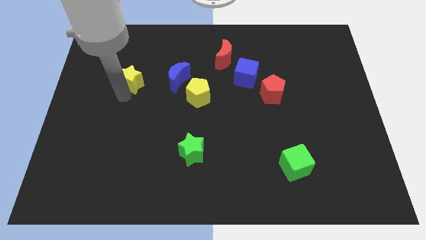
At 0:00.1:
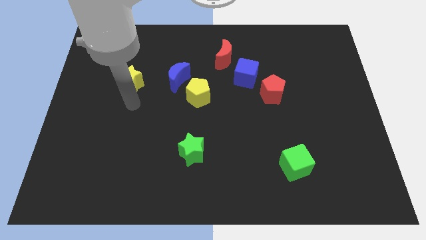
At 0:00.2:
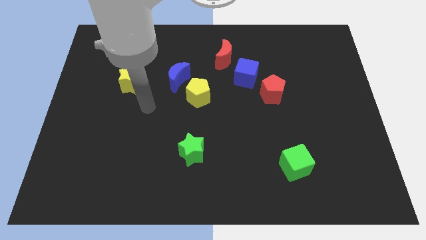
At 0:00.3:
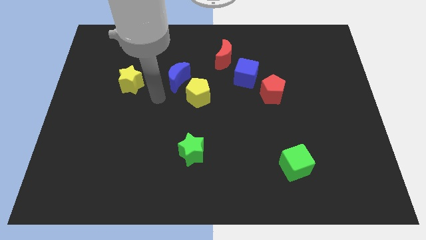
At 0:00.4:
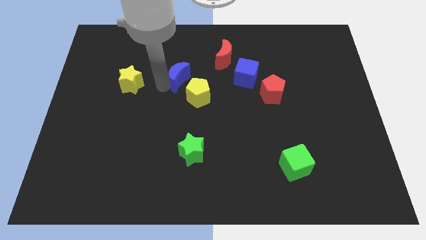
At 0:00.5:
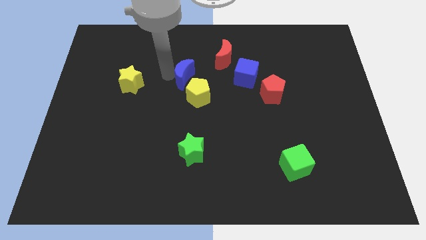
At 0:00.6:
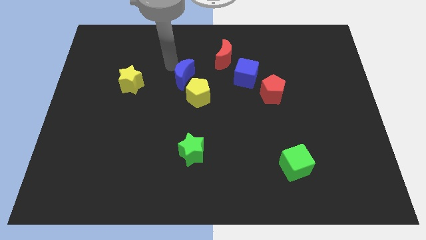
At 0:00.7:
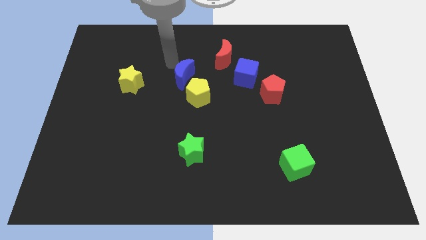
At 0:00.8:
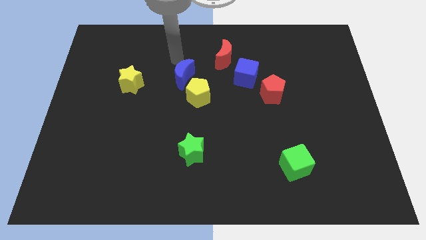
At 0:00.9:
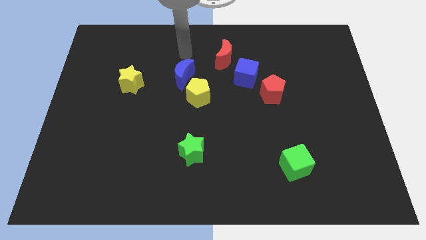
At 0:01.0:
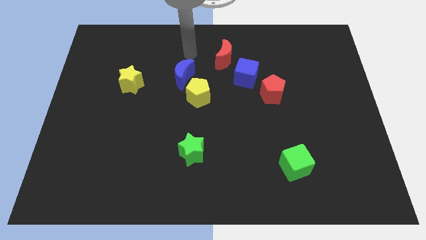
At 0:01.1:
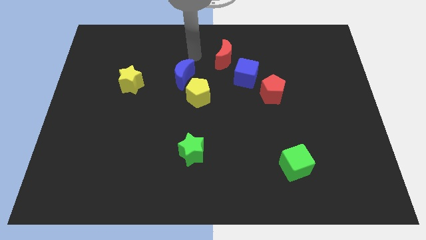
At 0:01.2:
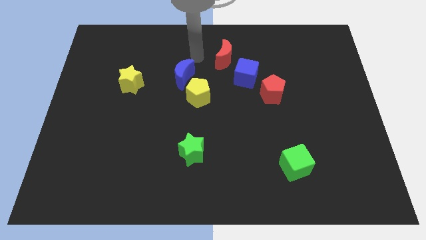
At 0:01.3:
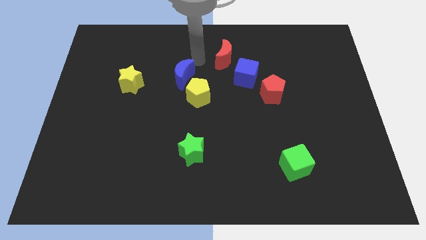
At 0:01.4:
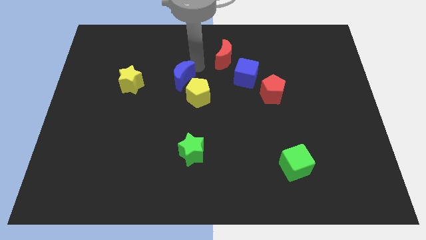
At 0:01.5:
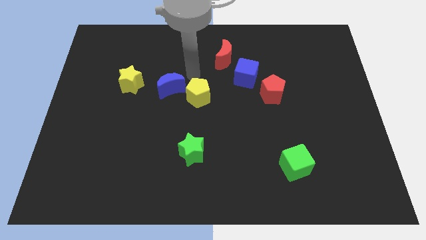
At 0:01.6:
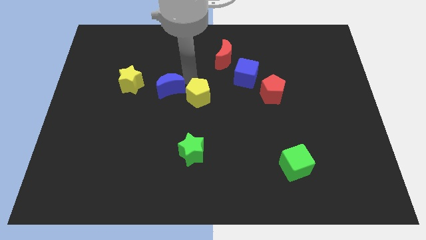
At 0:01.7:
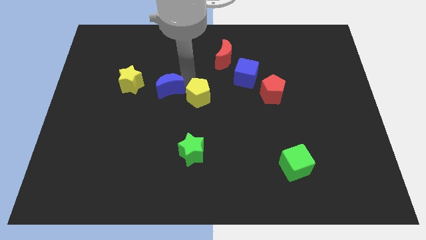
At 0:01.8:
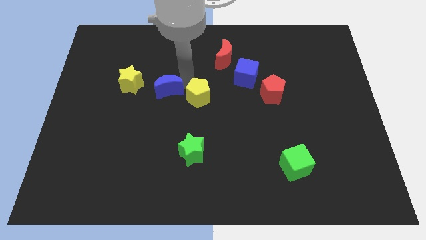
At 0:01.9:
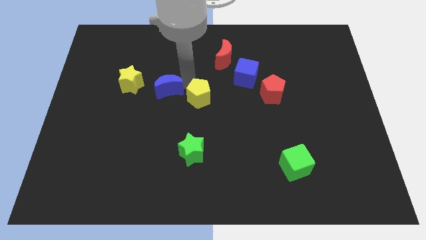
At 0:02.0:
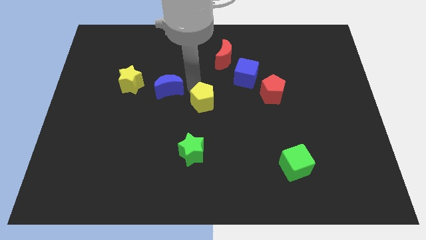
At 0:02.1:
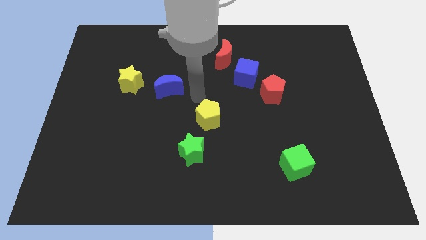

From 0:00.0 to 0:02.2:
push the yellow pentagon to separate from blue crescent

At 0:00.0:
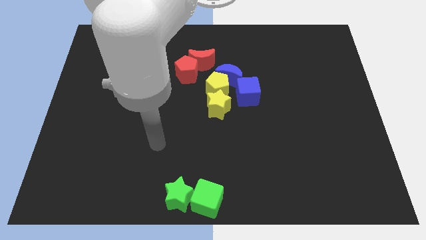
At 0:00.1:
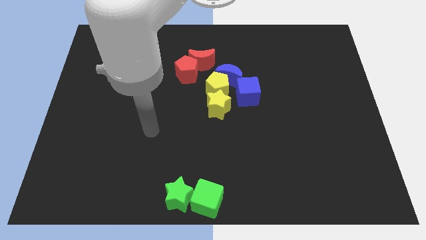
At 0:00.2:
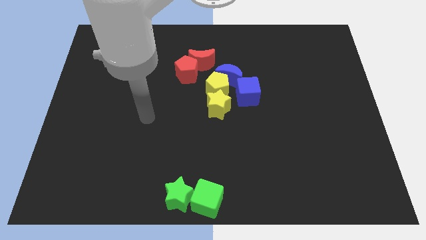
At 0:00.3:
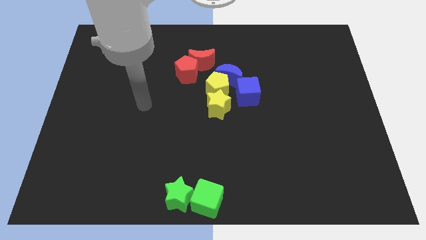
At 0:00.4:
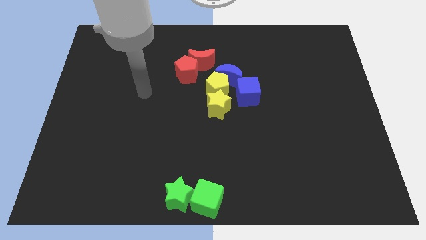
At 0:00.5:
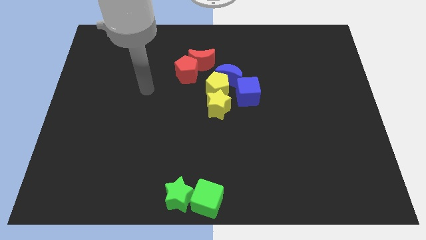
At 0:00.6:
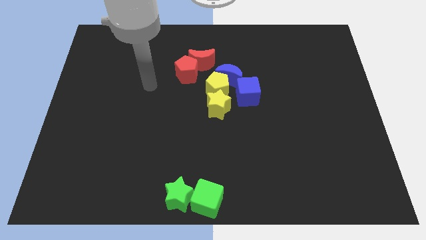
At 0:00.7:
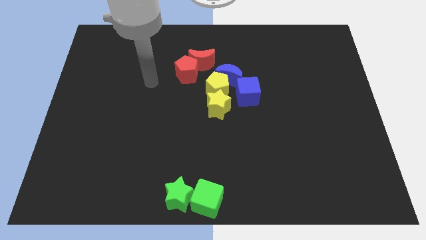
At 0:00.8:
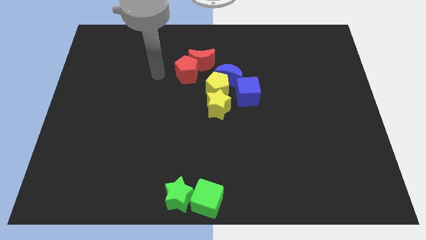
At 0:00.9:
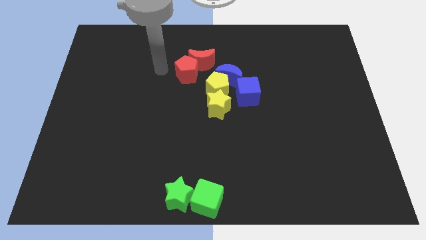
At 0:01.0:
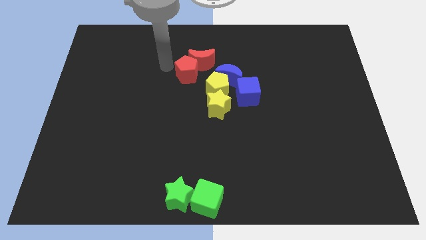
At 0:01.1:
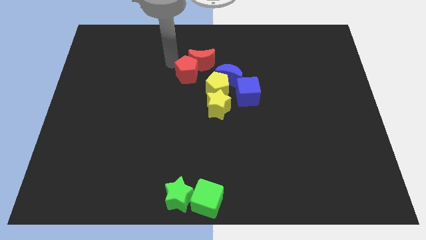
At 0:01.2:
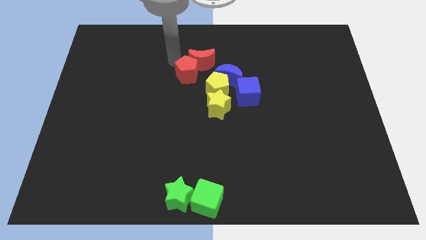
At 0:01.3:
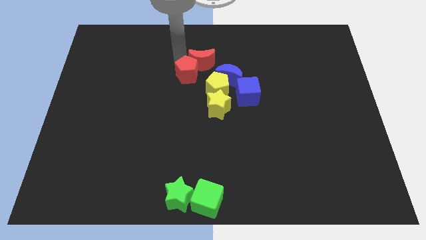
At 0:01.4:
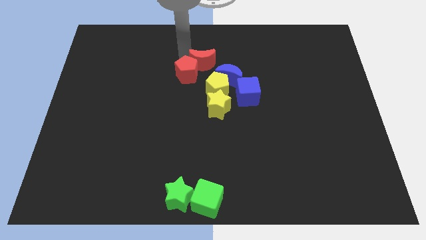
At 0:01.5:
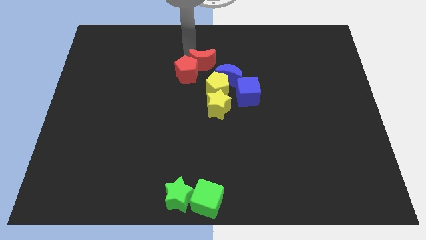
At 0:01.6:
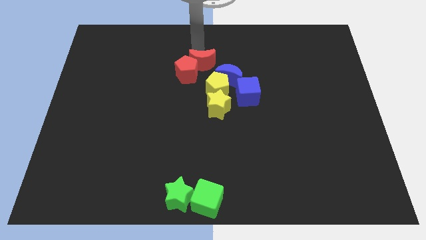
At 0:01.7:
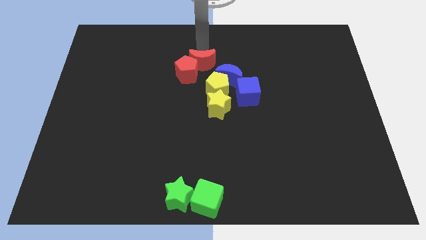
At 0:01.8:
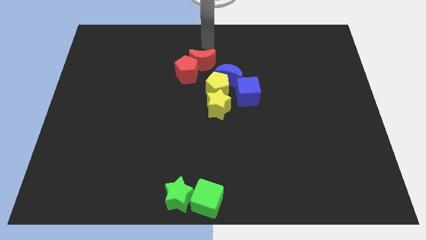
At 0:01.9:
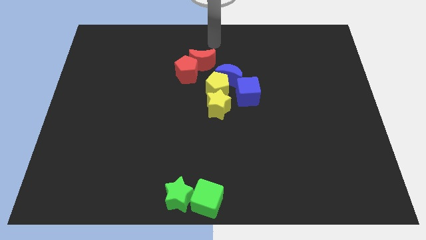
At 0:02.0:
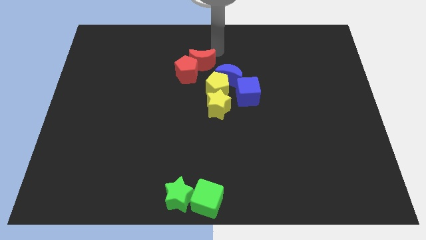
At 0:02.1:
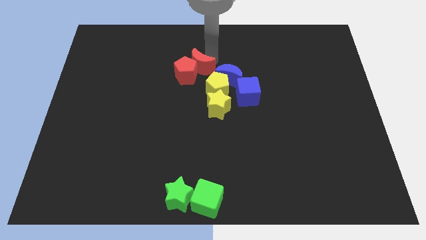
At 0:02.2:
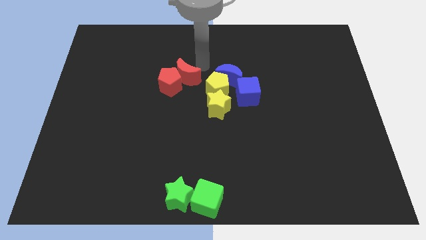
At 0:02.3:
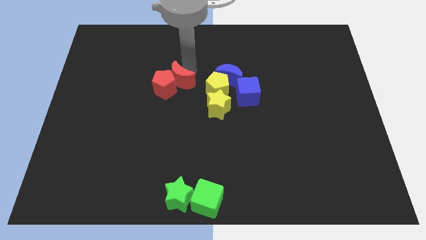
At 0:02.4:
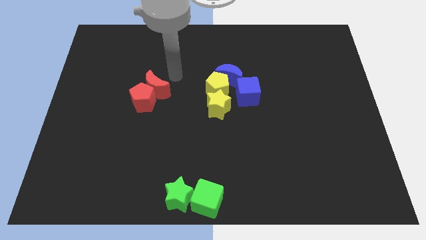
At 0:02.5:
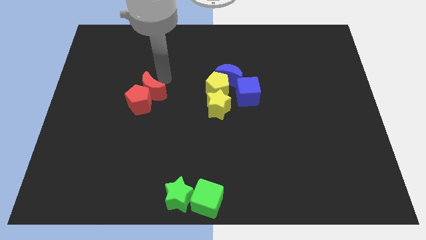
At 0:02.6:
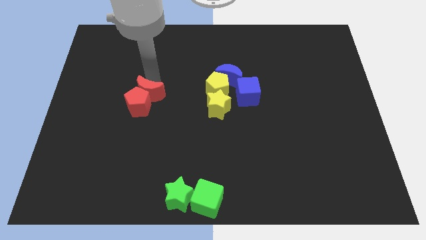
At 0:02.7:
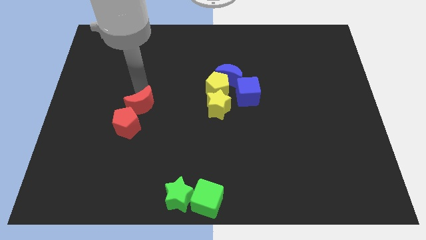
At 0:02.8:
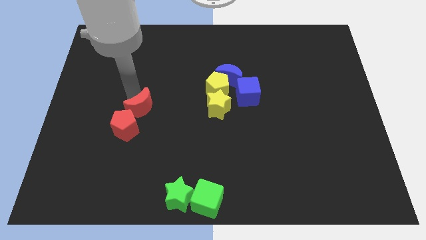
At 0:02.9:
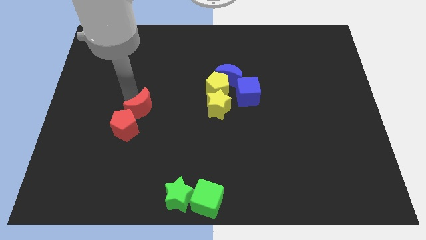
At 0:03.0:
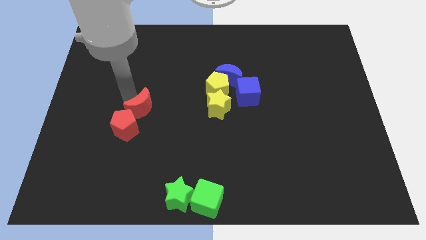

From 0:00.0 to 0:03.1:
push the red blocks to the bottom left side of the yellow star

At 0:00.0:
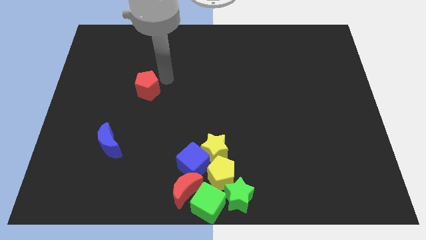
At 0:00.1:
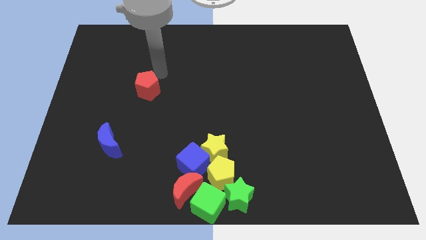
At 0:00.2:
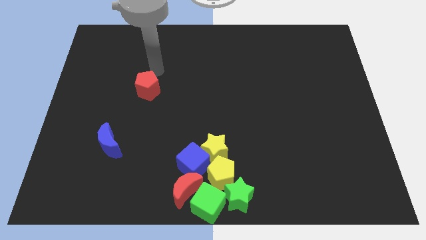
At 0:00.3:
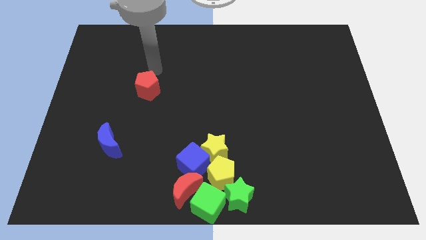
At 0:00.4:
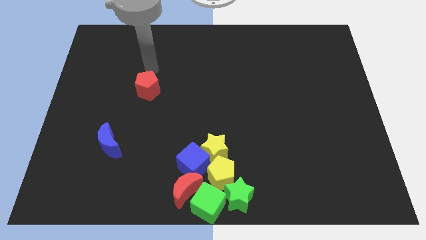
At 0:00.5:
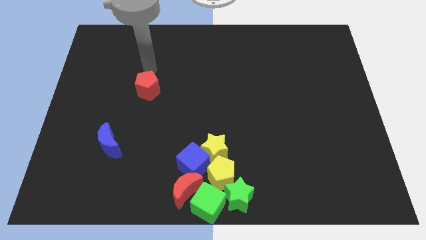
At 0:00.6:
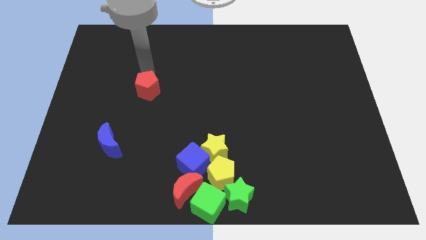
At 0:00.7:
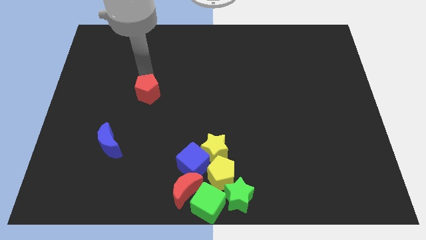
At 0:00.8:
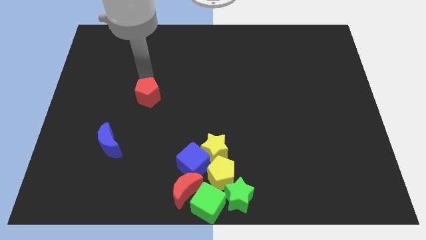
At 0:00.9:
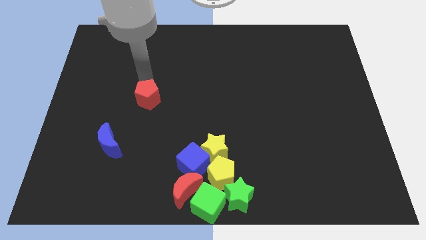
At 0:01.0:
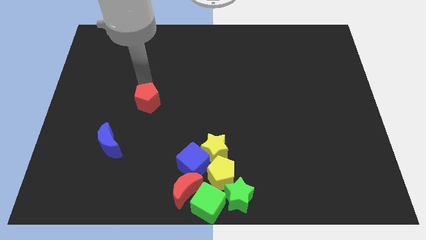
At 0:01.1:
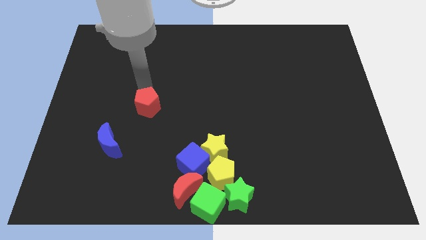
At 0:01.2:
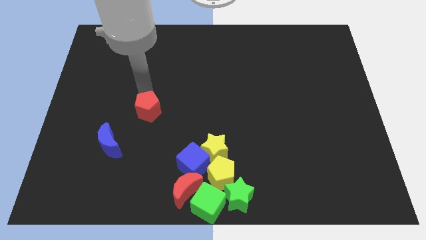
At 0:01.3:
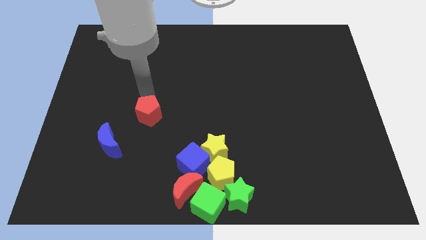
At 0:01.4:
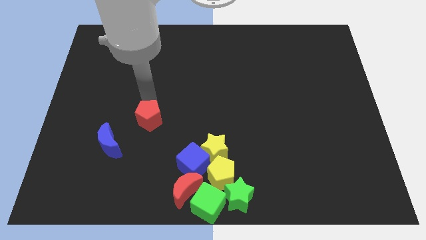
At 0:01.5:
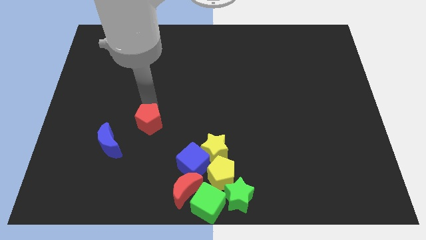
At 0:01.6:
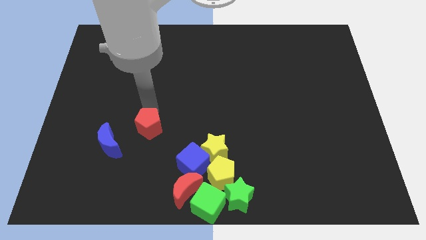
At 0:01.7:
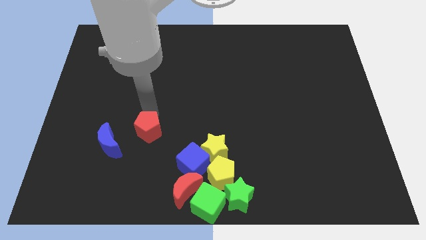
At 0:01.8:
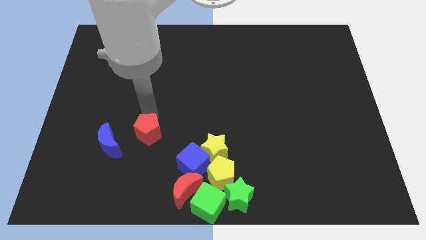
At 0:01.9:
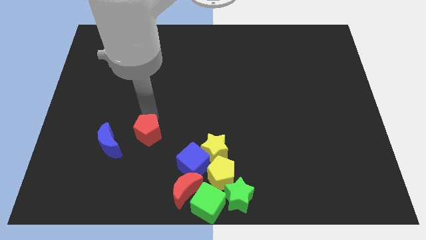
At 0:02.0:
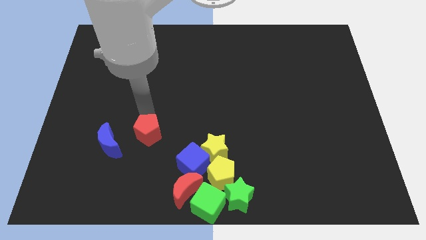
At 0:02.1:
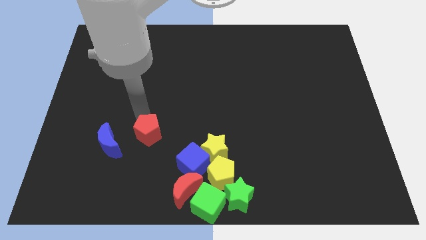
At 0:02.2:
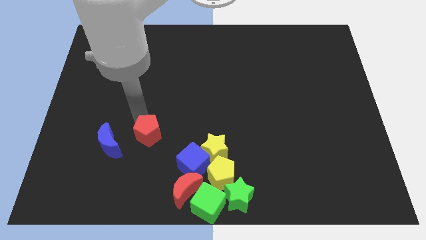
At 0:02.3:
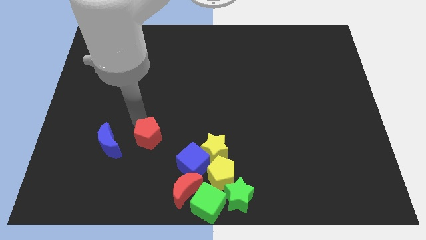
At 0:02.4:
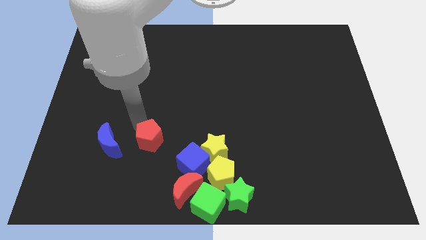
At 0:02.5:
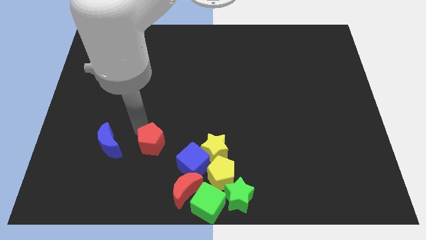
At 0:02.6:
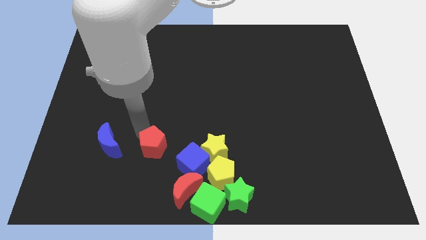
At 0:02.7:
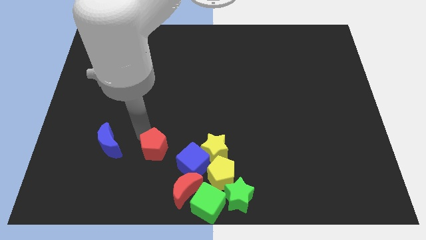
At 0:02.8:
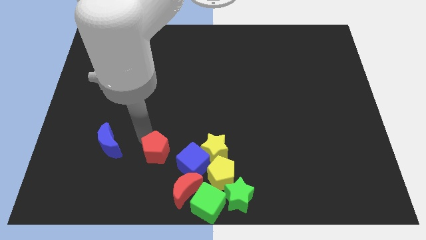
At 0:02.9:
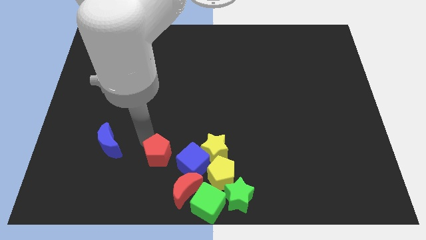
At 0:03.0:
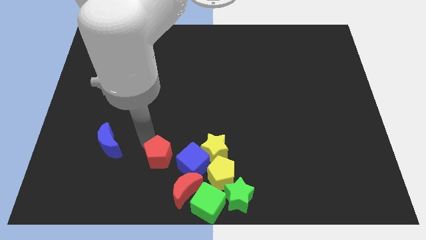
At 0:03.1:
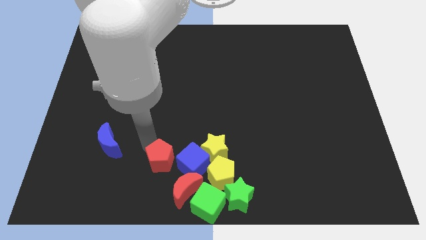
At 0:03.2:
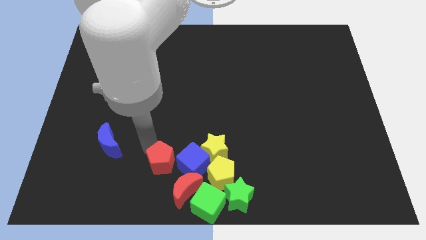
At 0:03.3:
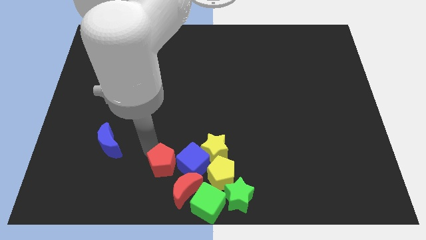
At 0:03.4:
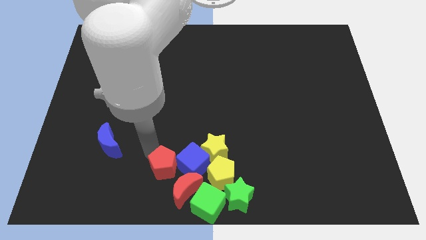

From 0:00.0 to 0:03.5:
push the red pentagon to the left of the blue cube
